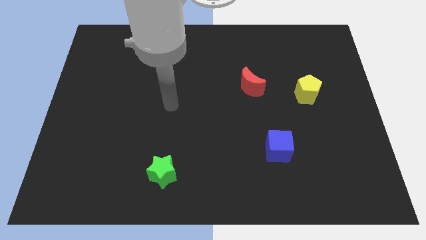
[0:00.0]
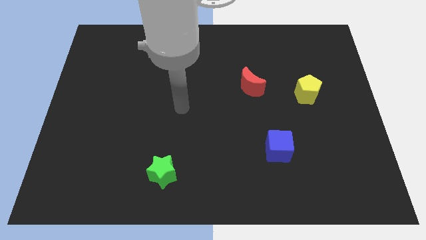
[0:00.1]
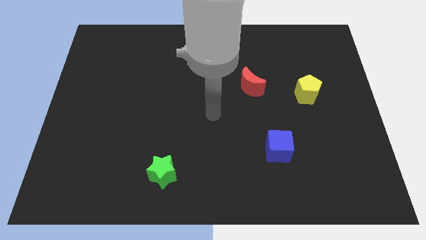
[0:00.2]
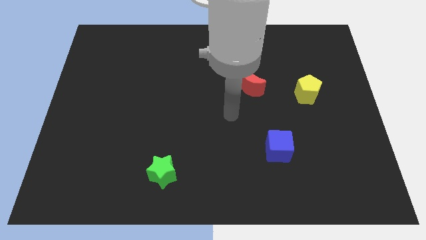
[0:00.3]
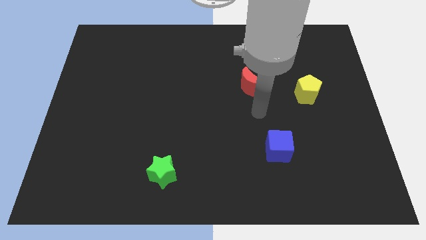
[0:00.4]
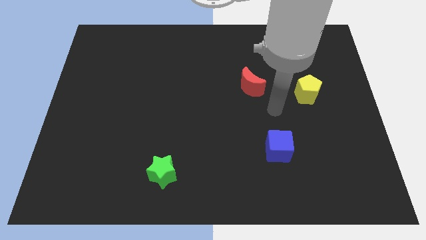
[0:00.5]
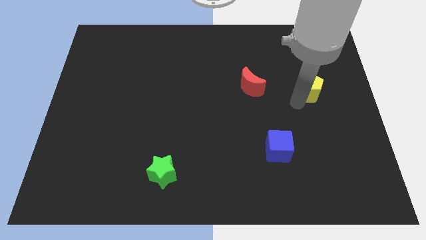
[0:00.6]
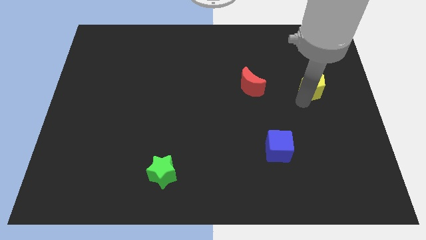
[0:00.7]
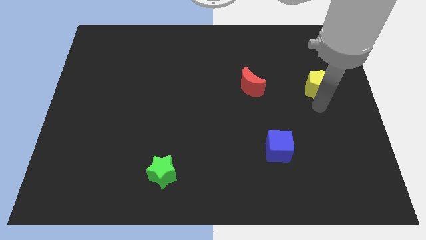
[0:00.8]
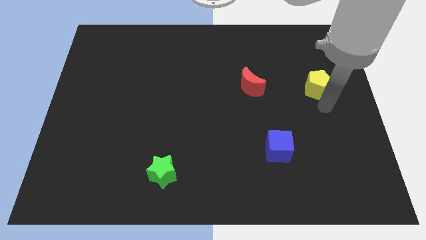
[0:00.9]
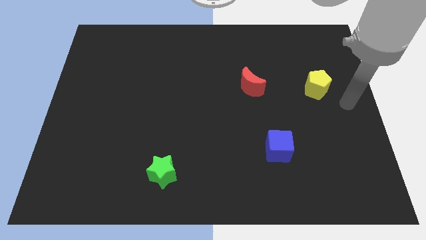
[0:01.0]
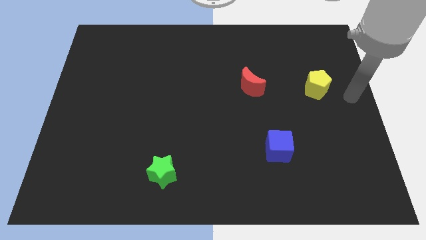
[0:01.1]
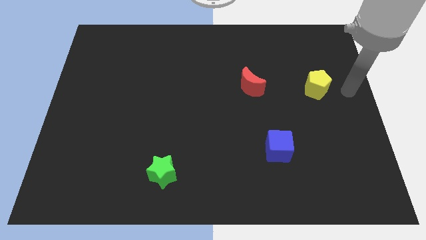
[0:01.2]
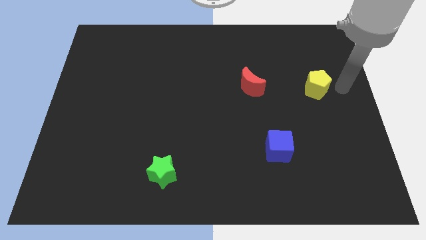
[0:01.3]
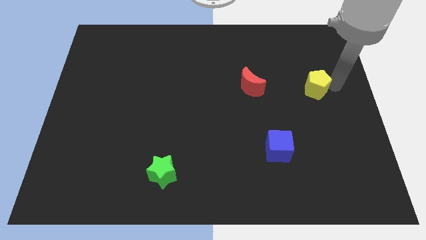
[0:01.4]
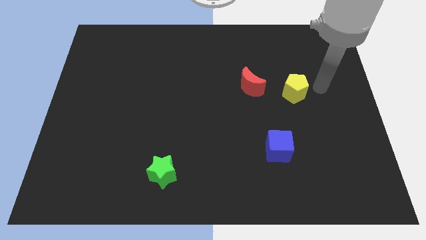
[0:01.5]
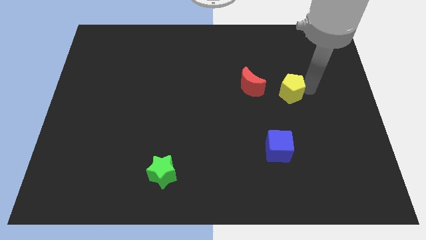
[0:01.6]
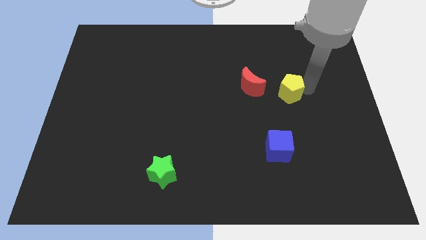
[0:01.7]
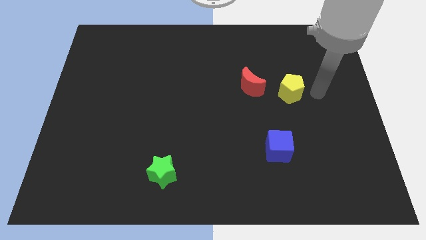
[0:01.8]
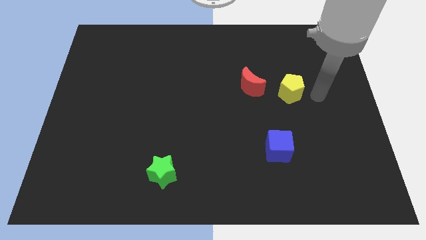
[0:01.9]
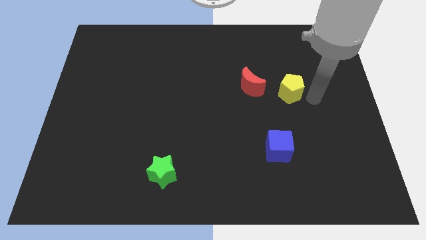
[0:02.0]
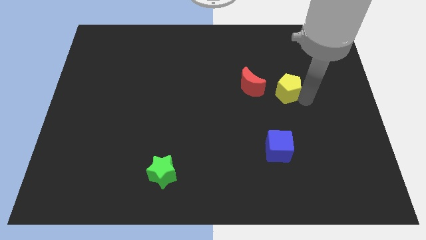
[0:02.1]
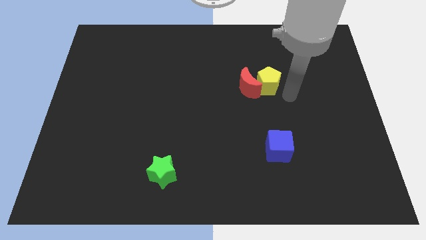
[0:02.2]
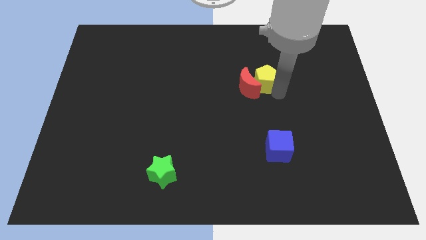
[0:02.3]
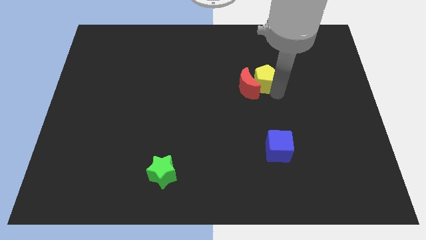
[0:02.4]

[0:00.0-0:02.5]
slide the yellow pentagon next to the red block

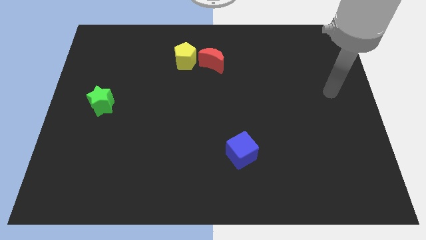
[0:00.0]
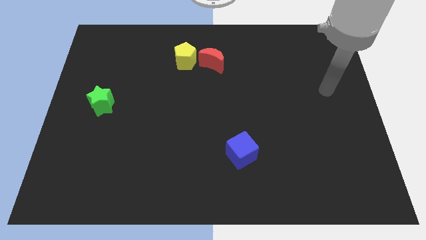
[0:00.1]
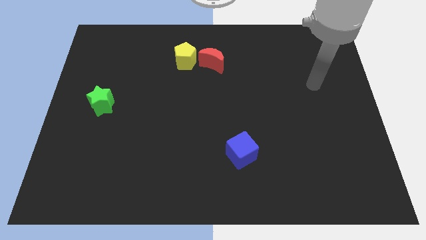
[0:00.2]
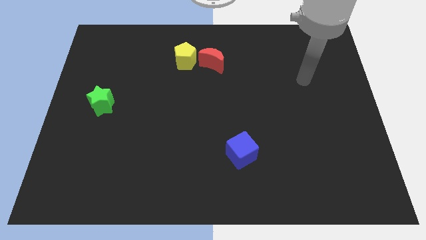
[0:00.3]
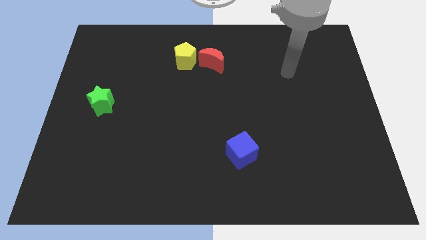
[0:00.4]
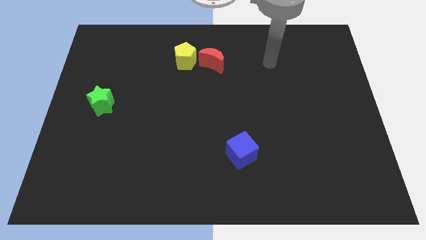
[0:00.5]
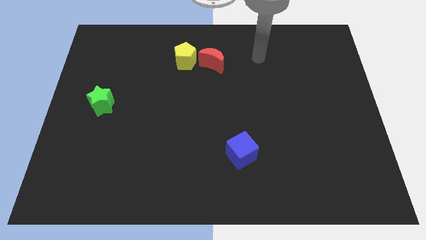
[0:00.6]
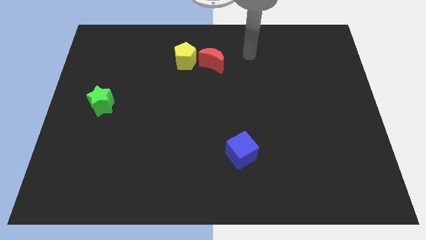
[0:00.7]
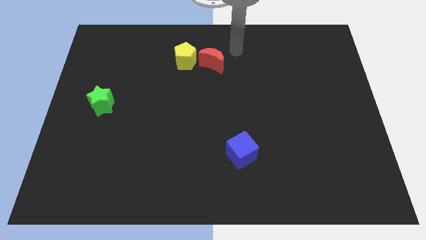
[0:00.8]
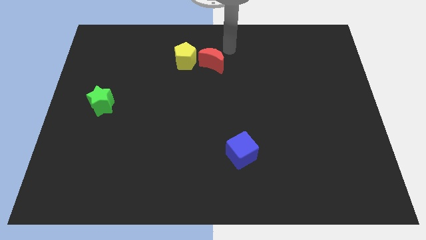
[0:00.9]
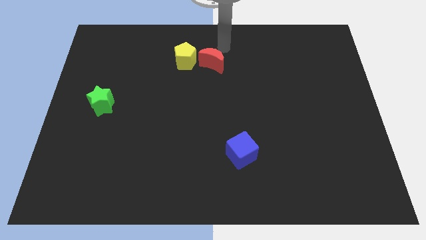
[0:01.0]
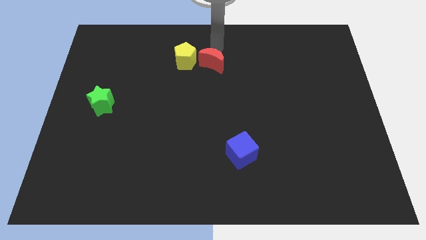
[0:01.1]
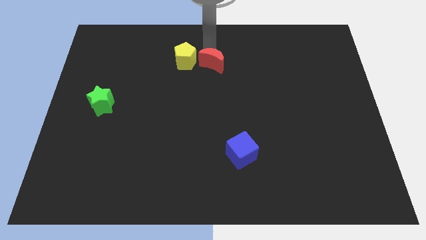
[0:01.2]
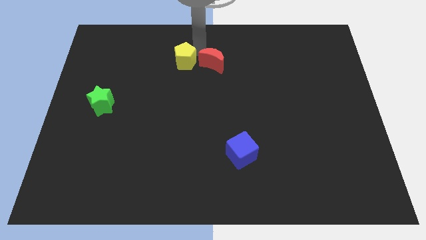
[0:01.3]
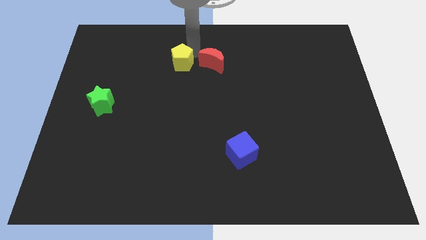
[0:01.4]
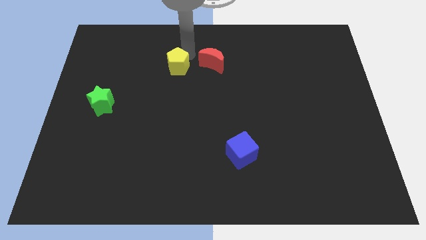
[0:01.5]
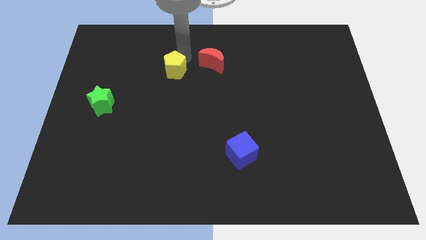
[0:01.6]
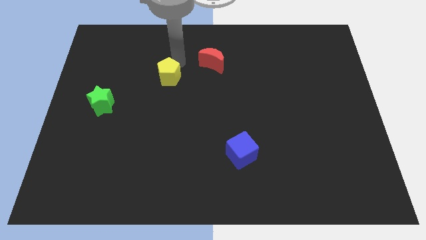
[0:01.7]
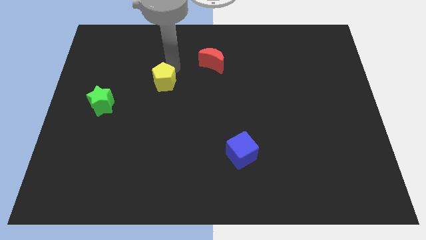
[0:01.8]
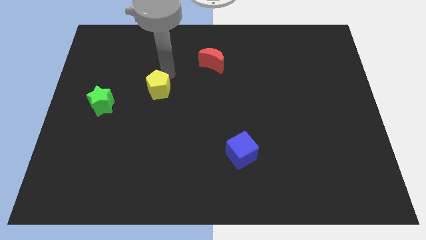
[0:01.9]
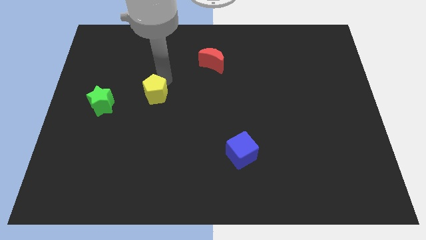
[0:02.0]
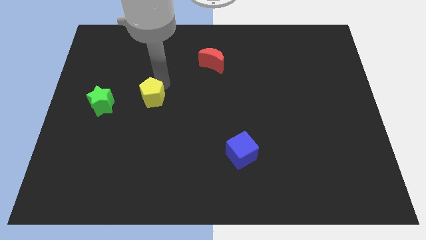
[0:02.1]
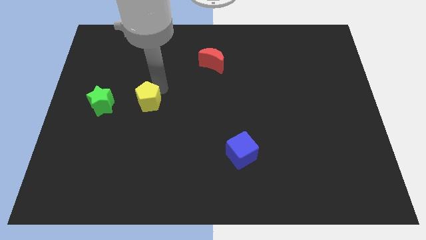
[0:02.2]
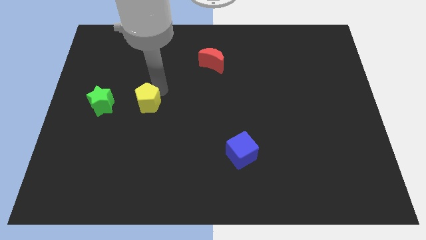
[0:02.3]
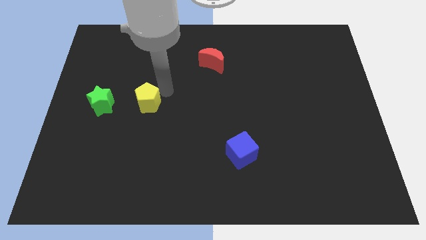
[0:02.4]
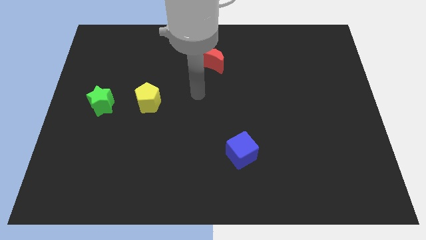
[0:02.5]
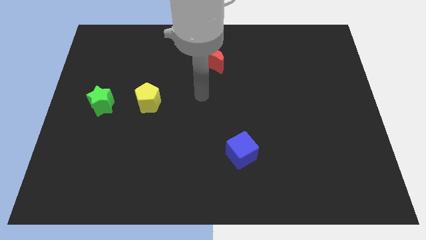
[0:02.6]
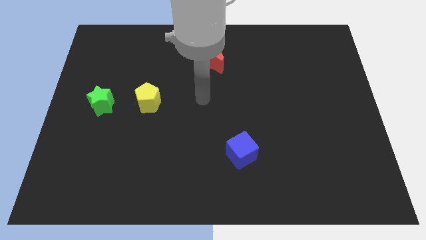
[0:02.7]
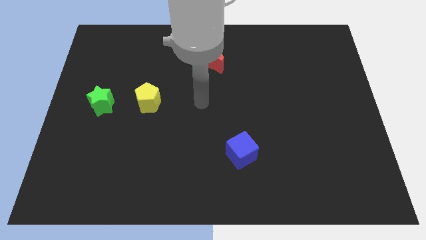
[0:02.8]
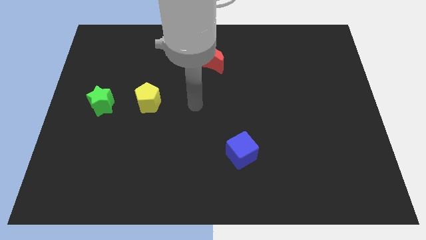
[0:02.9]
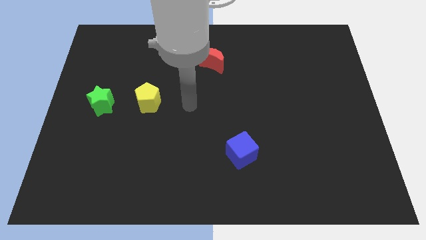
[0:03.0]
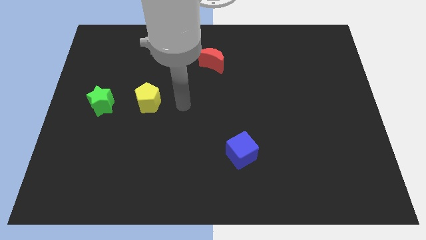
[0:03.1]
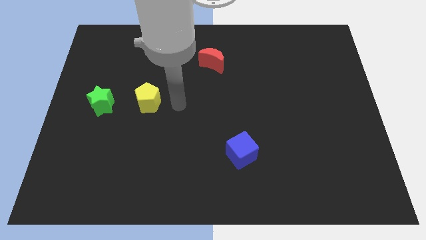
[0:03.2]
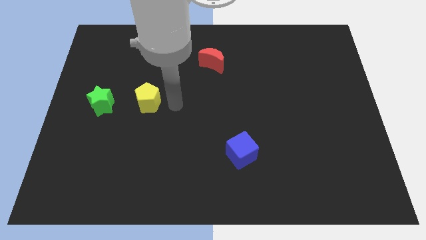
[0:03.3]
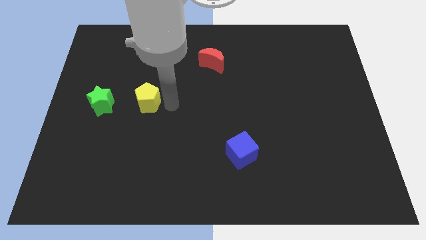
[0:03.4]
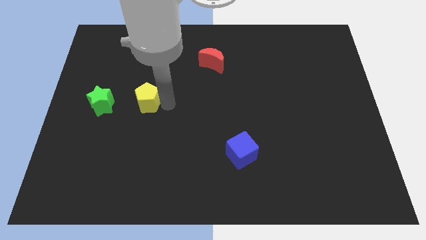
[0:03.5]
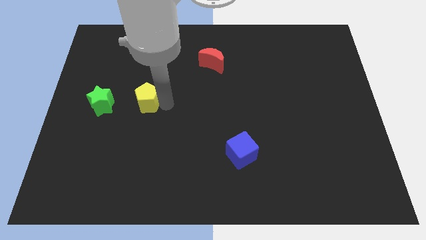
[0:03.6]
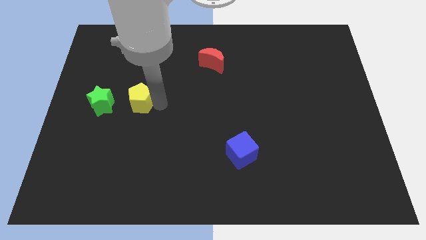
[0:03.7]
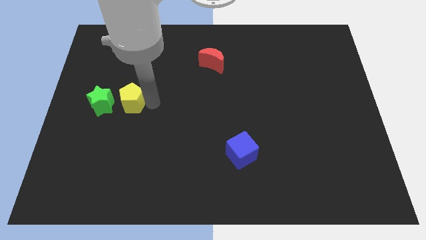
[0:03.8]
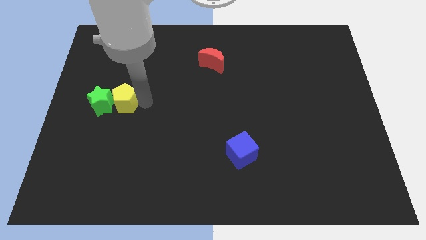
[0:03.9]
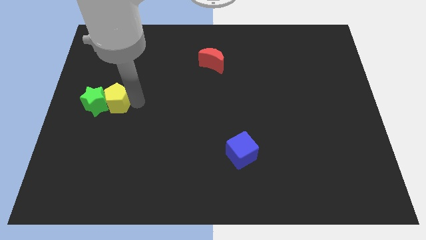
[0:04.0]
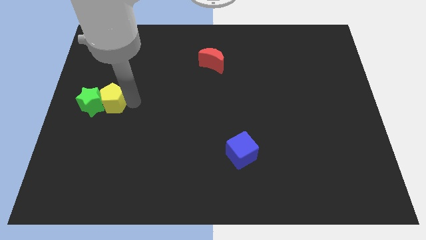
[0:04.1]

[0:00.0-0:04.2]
push the yellow block to the green star

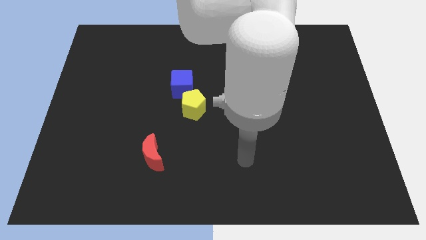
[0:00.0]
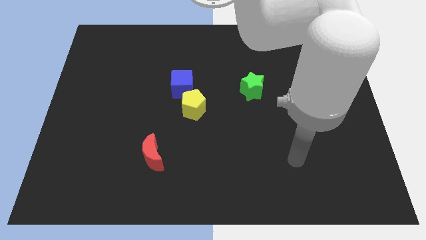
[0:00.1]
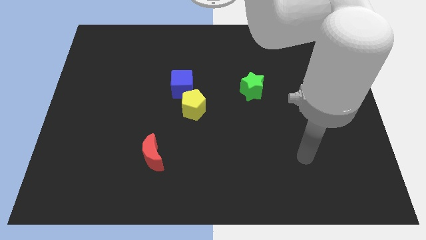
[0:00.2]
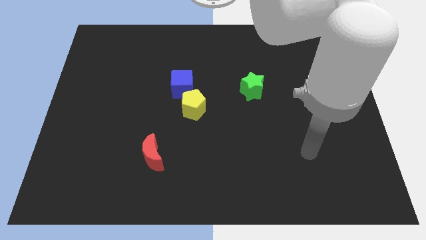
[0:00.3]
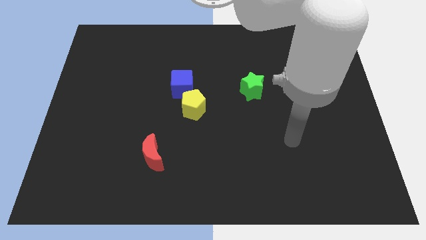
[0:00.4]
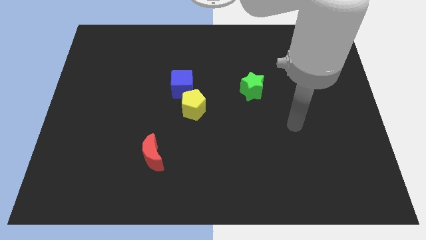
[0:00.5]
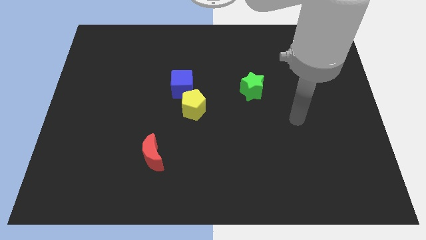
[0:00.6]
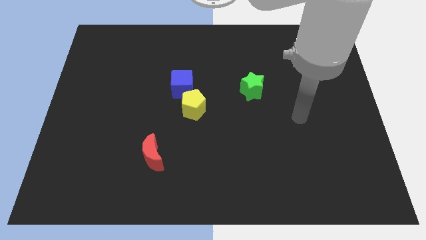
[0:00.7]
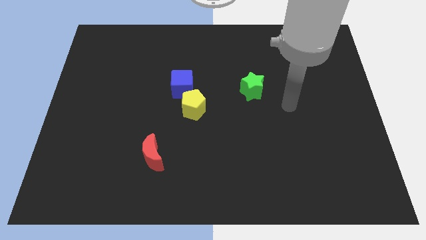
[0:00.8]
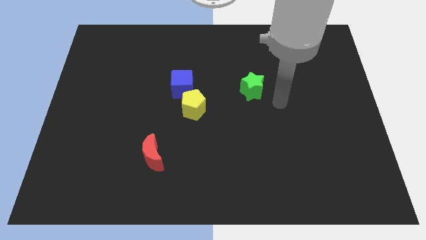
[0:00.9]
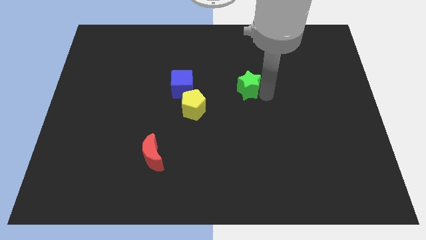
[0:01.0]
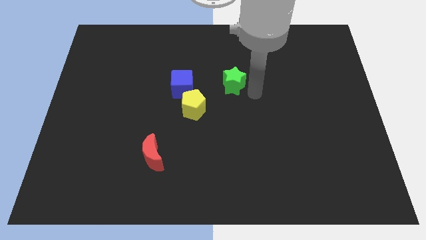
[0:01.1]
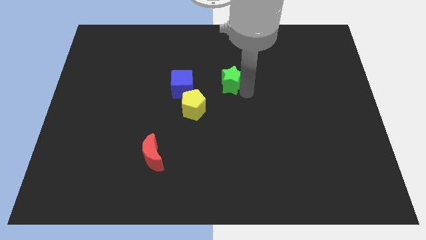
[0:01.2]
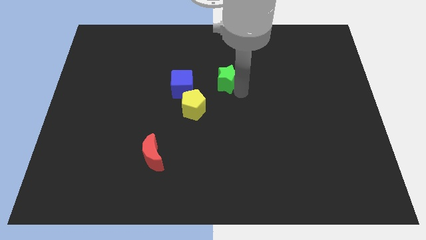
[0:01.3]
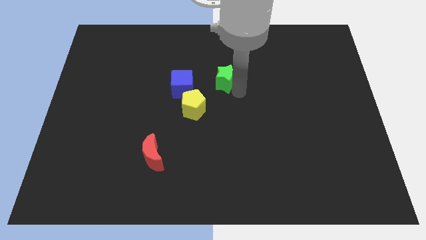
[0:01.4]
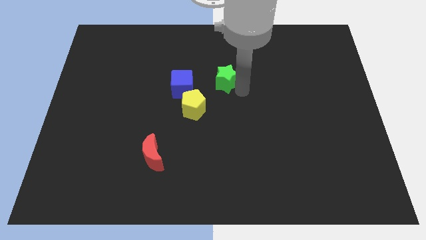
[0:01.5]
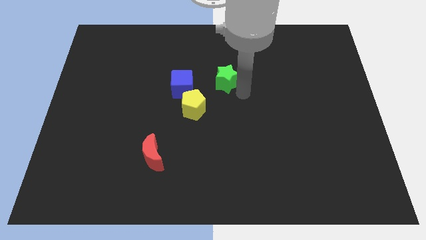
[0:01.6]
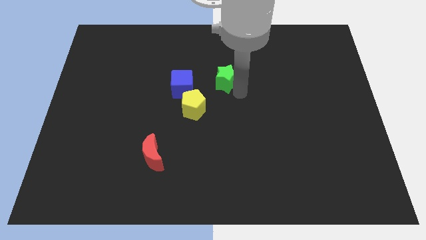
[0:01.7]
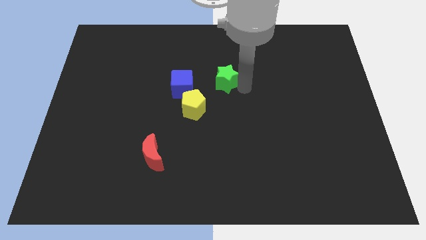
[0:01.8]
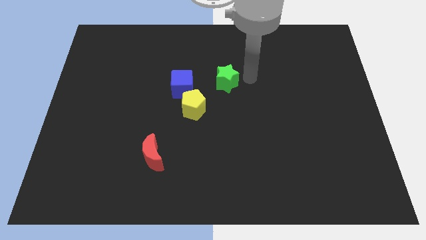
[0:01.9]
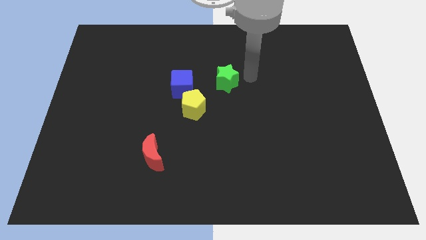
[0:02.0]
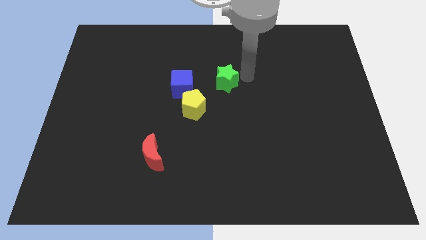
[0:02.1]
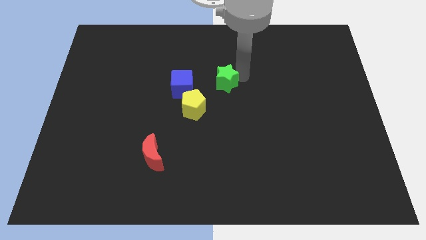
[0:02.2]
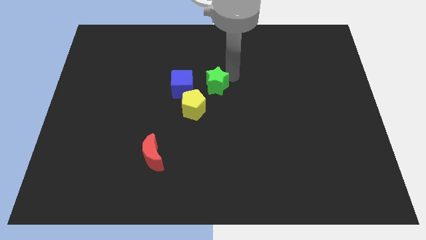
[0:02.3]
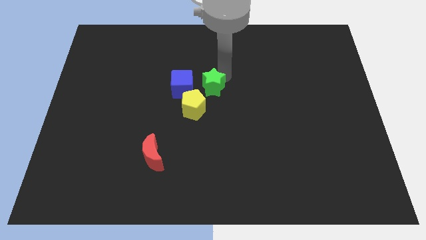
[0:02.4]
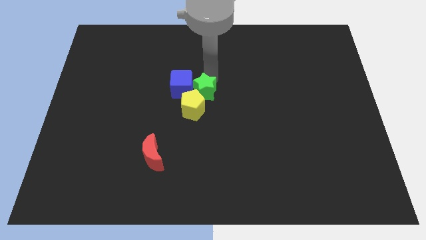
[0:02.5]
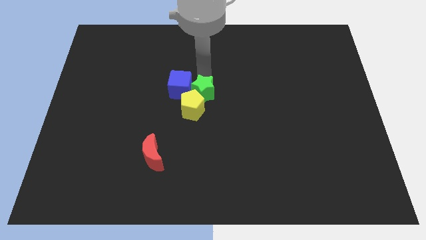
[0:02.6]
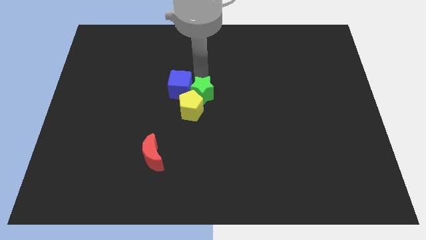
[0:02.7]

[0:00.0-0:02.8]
move the green star towards the cube
